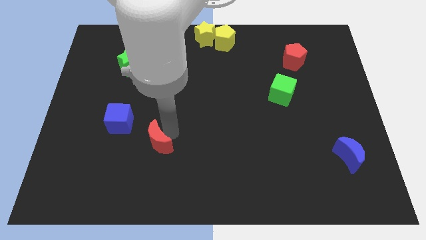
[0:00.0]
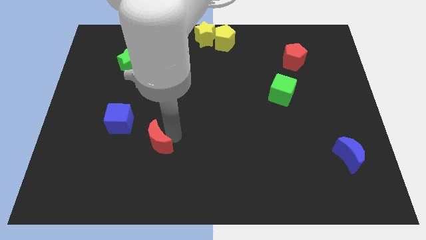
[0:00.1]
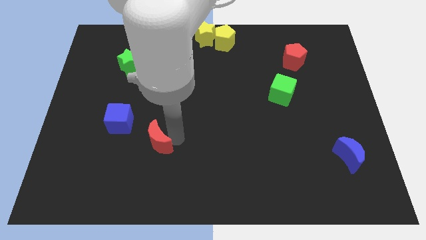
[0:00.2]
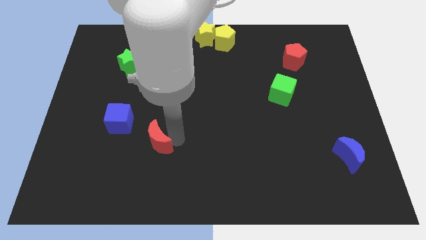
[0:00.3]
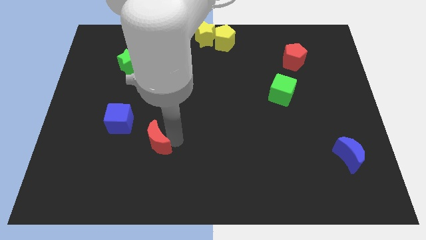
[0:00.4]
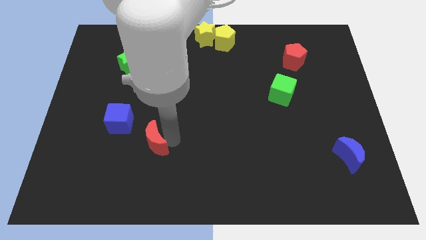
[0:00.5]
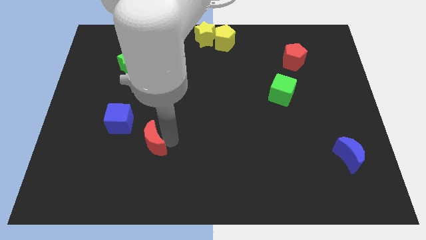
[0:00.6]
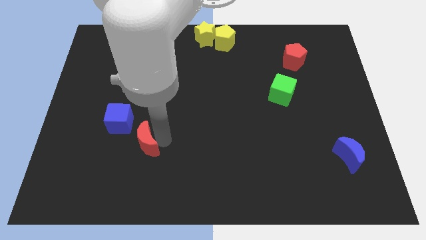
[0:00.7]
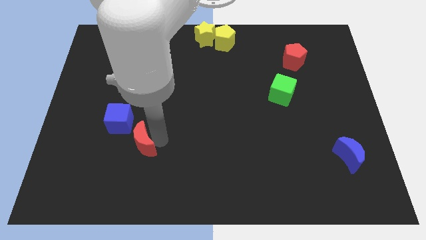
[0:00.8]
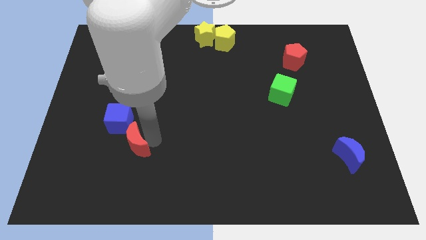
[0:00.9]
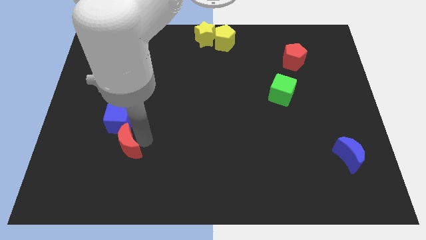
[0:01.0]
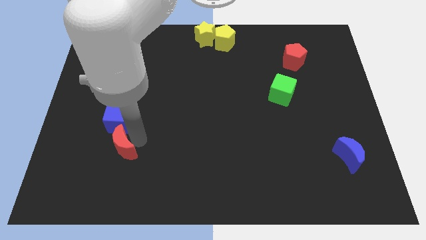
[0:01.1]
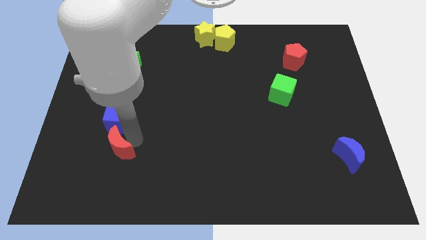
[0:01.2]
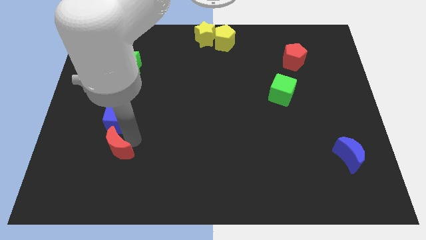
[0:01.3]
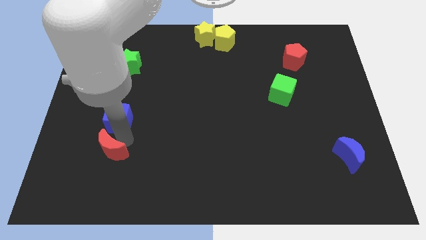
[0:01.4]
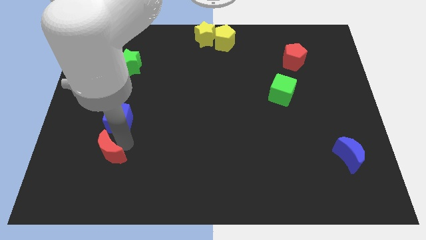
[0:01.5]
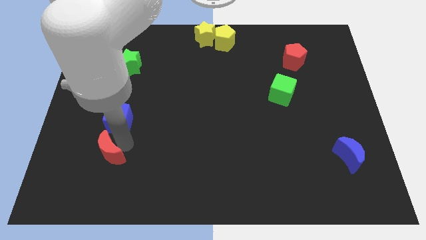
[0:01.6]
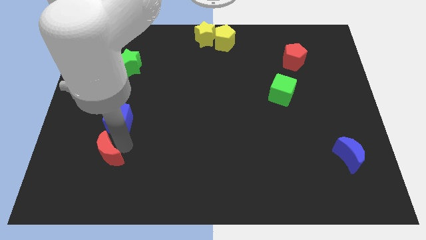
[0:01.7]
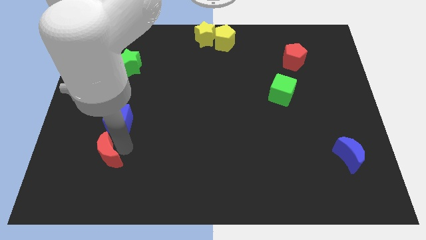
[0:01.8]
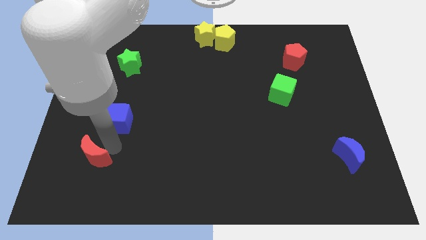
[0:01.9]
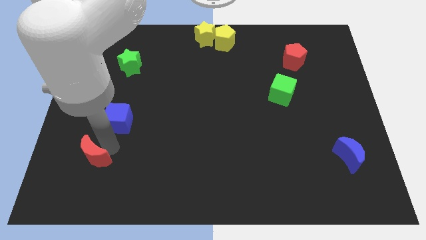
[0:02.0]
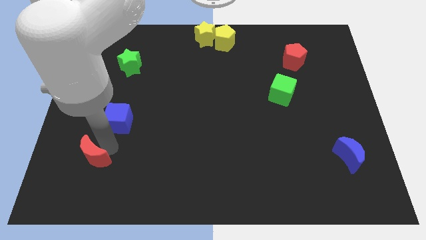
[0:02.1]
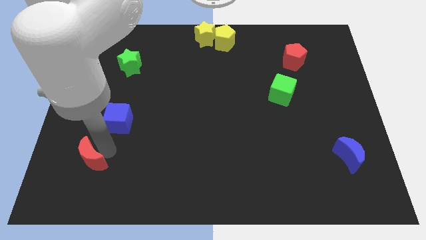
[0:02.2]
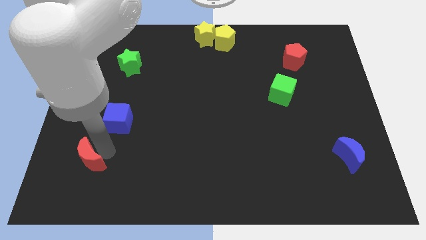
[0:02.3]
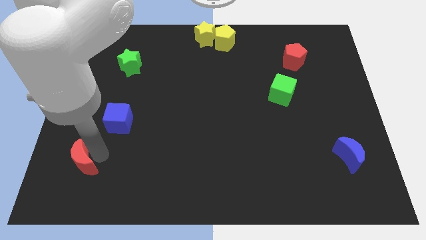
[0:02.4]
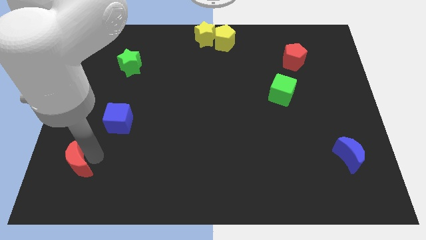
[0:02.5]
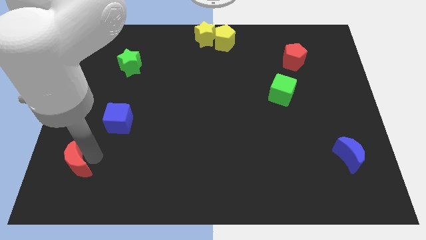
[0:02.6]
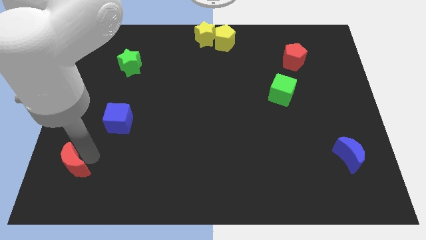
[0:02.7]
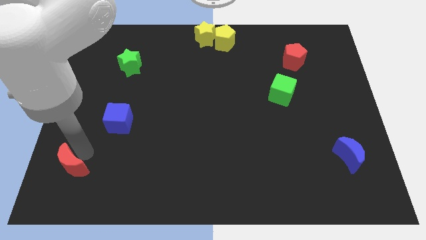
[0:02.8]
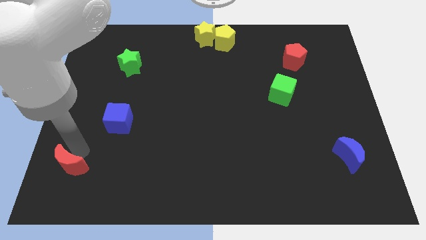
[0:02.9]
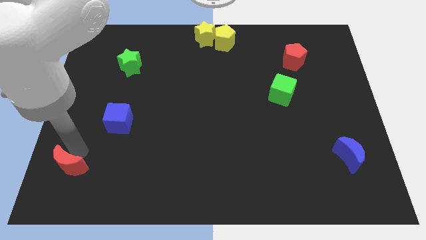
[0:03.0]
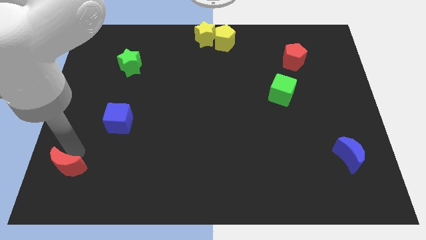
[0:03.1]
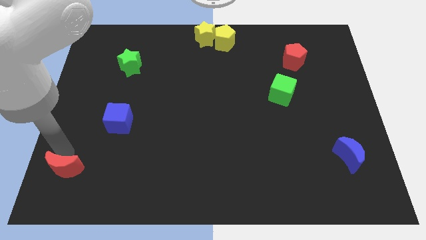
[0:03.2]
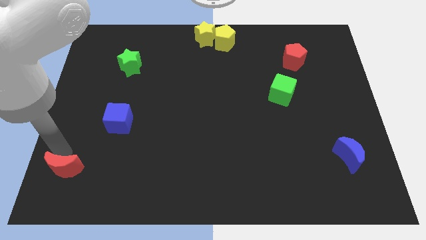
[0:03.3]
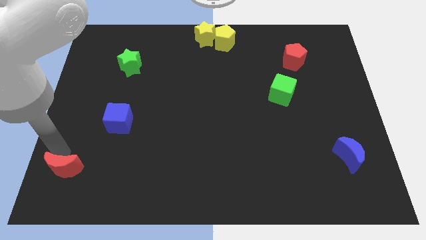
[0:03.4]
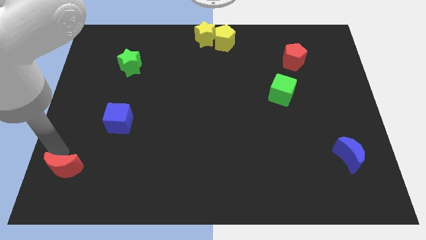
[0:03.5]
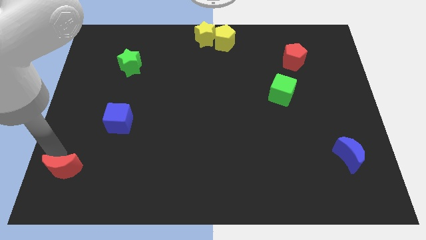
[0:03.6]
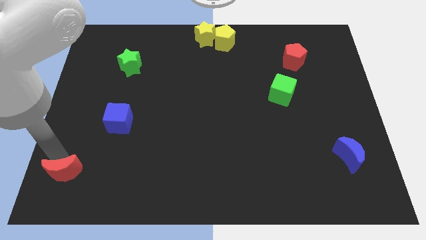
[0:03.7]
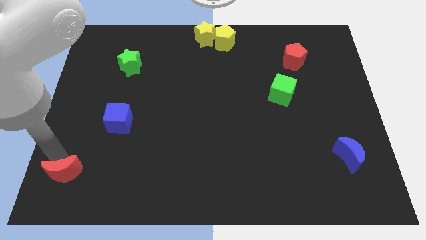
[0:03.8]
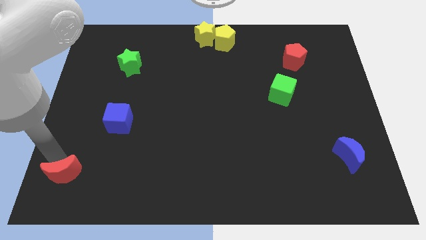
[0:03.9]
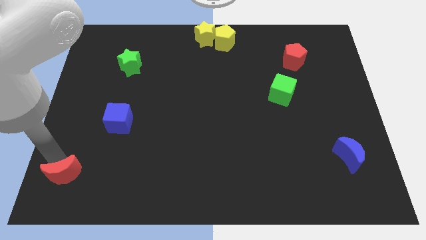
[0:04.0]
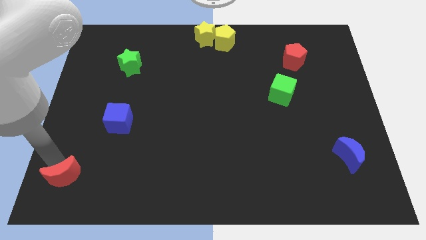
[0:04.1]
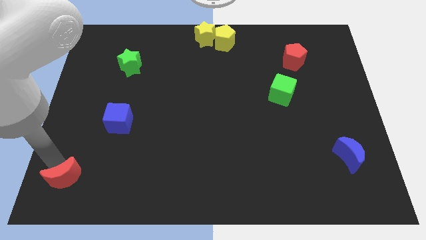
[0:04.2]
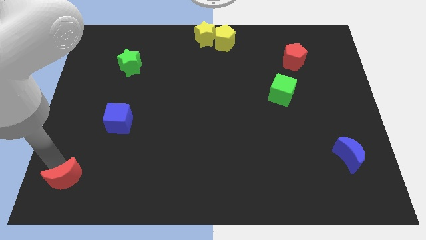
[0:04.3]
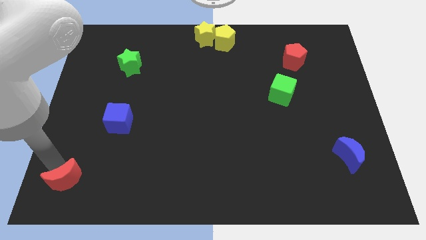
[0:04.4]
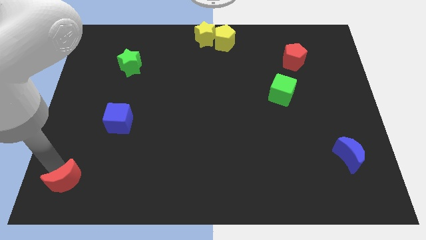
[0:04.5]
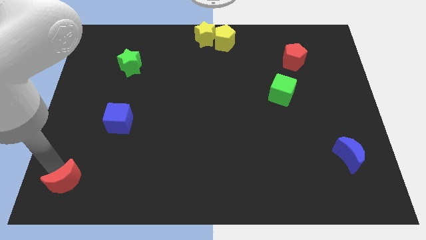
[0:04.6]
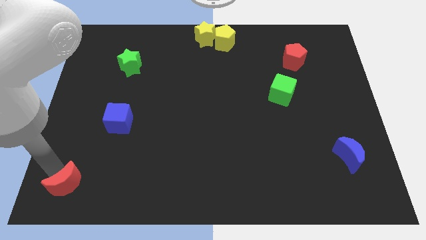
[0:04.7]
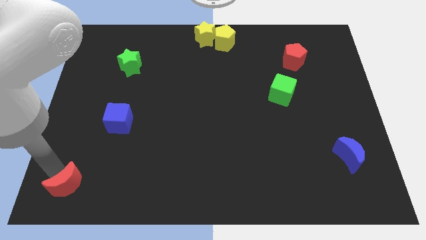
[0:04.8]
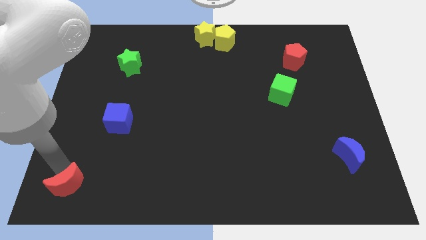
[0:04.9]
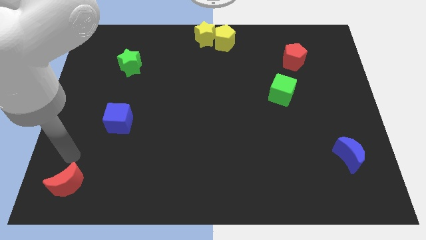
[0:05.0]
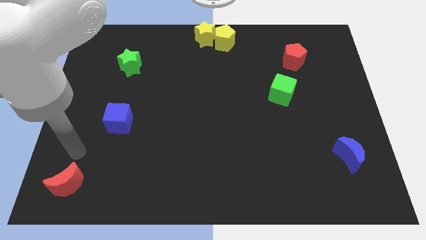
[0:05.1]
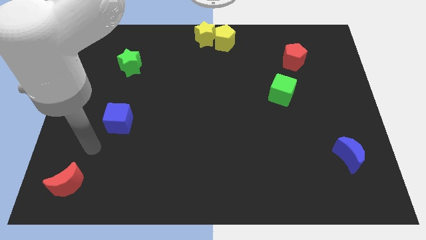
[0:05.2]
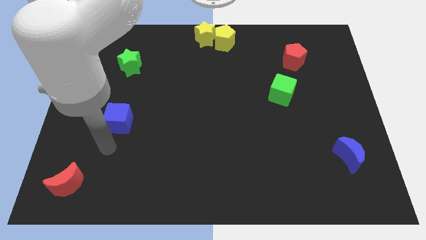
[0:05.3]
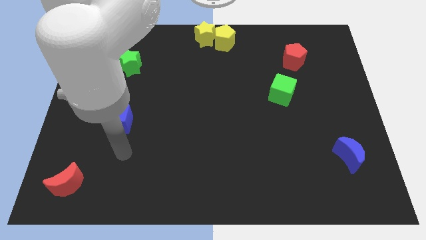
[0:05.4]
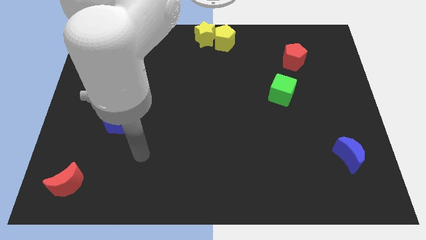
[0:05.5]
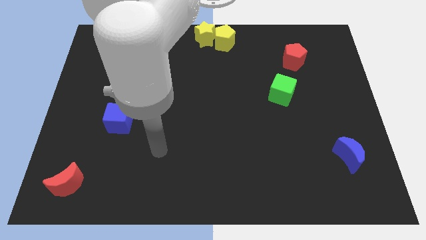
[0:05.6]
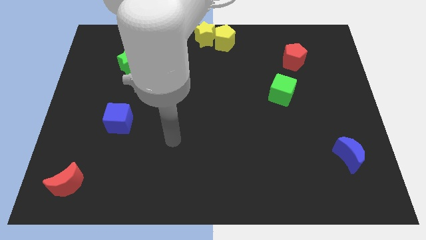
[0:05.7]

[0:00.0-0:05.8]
push the red moon to the bottom left side of the board

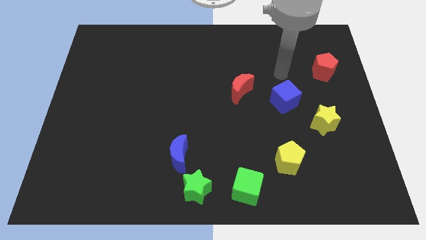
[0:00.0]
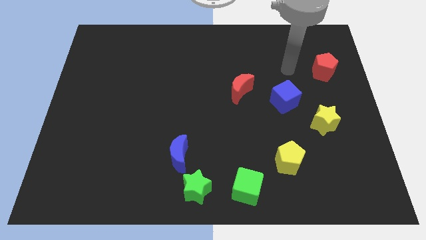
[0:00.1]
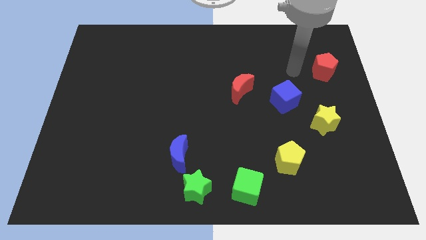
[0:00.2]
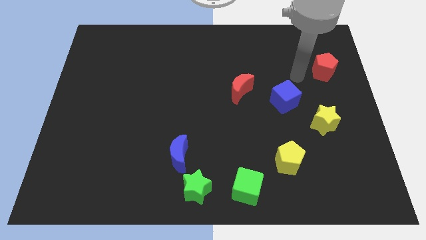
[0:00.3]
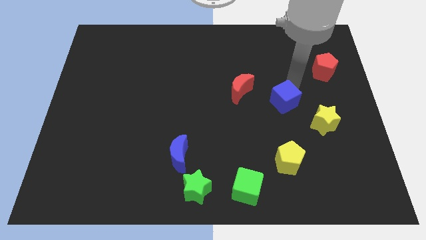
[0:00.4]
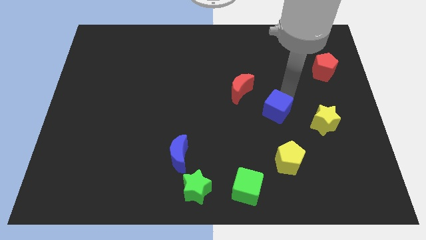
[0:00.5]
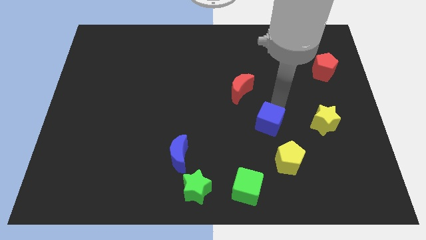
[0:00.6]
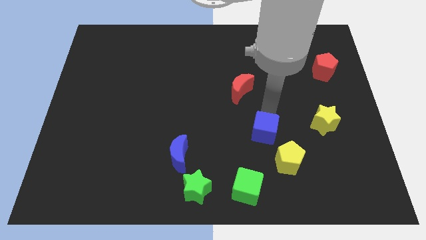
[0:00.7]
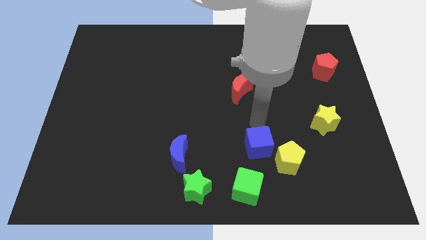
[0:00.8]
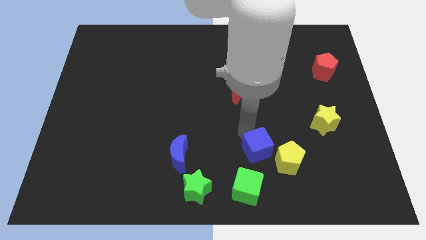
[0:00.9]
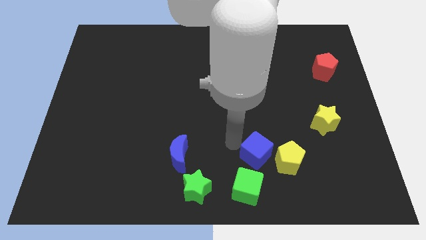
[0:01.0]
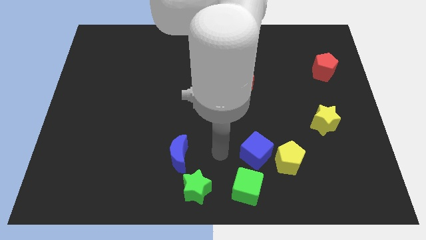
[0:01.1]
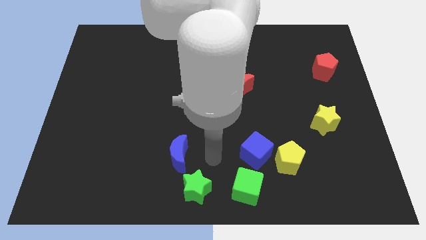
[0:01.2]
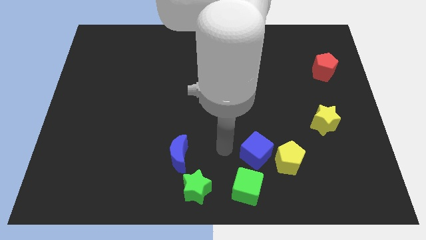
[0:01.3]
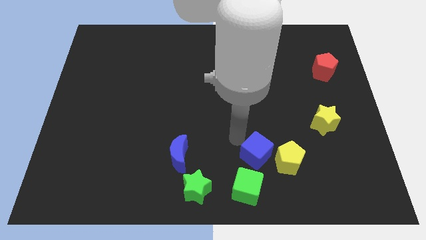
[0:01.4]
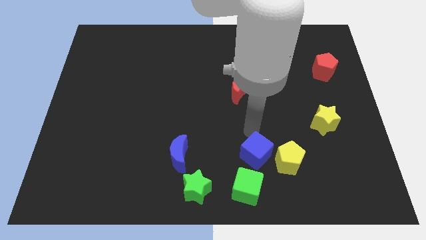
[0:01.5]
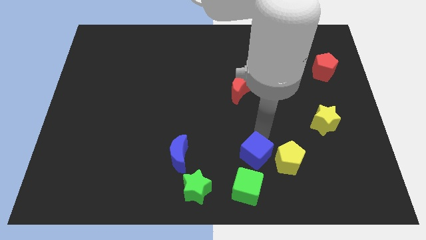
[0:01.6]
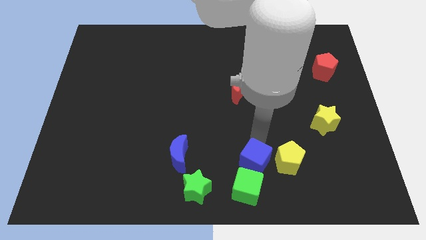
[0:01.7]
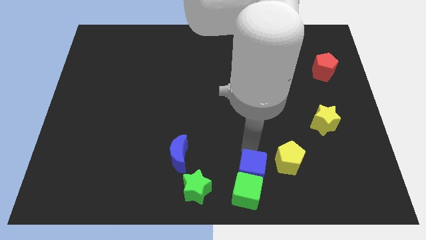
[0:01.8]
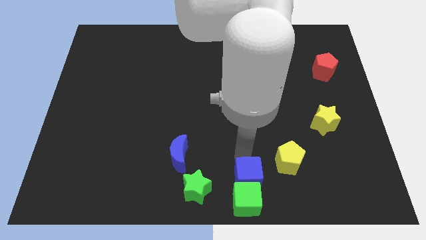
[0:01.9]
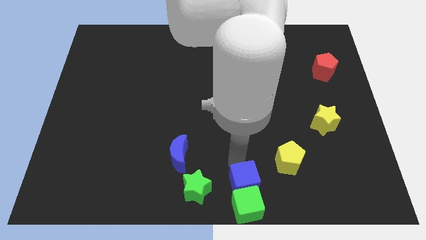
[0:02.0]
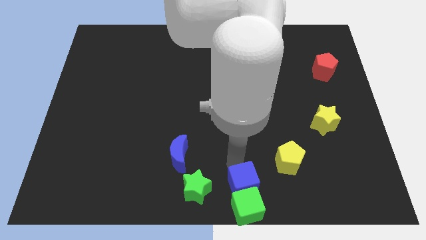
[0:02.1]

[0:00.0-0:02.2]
push the blue cube into the green cube

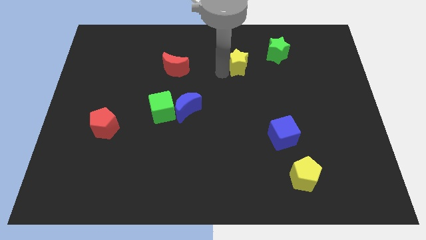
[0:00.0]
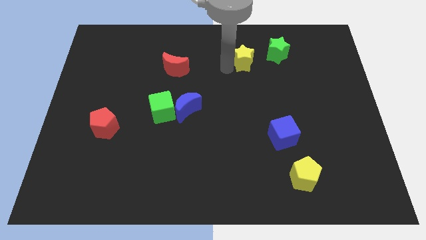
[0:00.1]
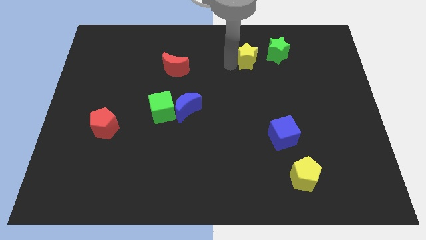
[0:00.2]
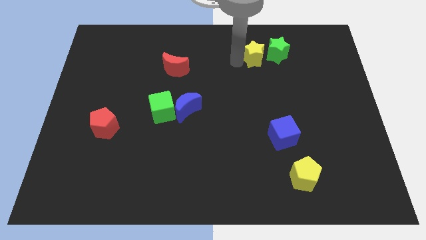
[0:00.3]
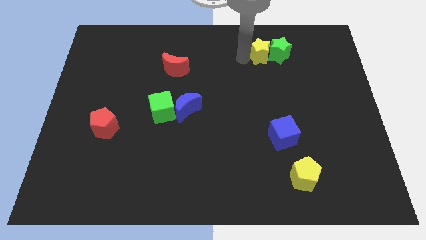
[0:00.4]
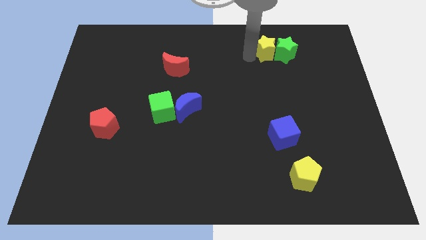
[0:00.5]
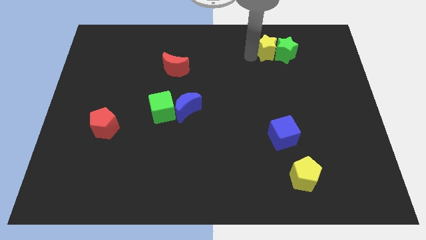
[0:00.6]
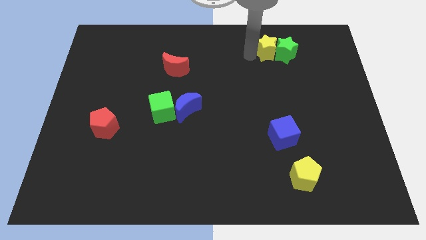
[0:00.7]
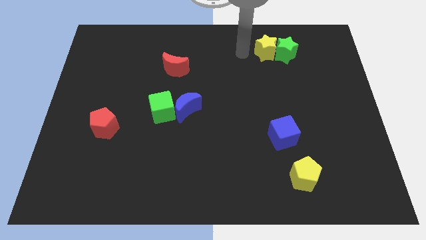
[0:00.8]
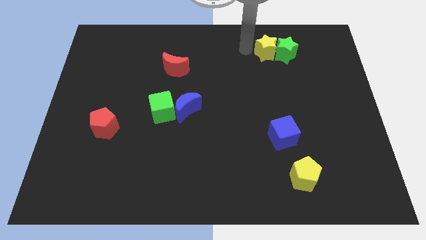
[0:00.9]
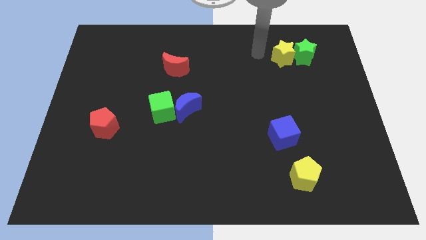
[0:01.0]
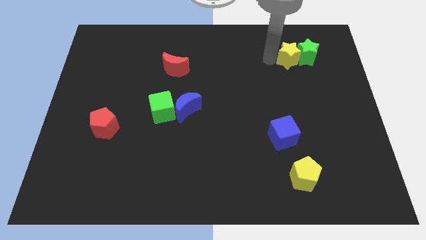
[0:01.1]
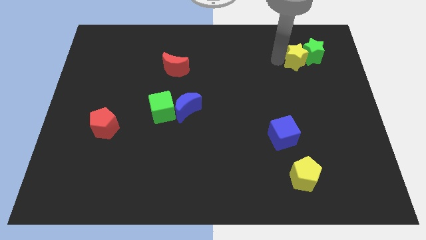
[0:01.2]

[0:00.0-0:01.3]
push yellow star into green star
